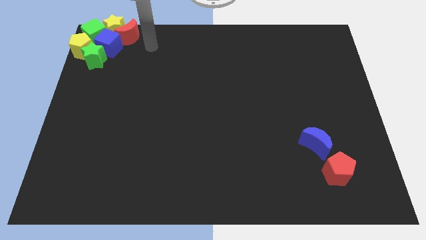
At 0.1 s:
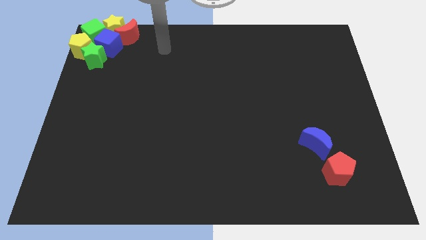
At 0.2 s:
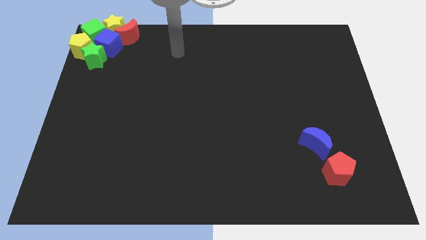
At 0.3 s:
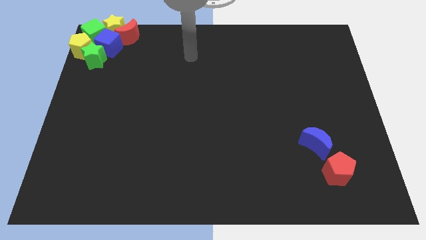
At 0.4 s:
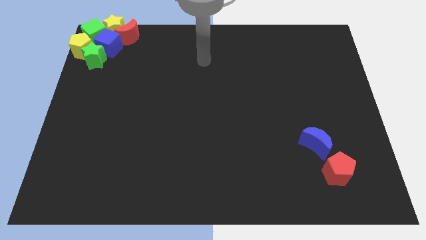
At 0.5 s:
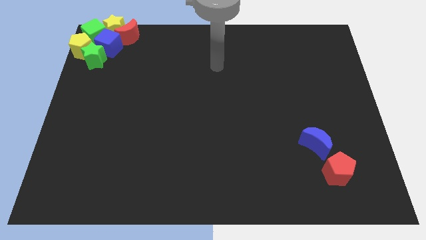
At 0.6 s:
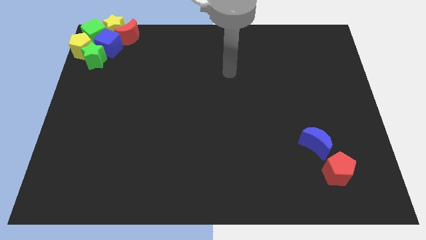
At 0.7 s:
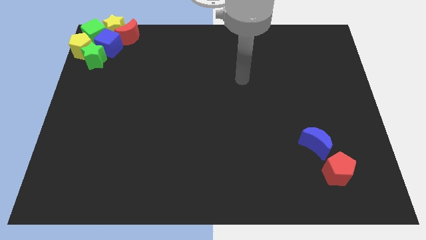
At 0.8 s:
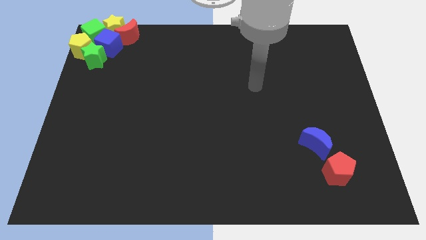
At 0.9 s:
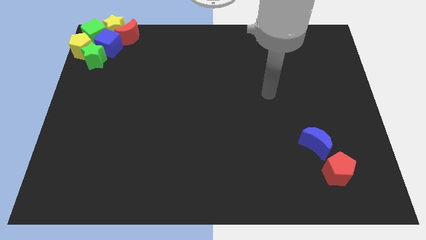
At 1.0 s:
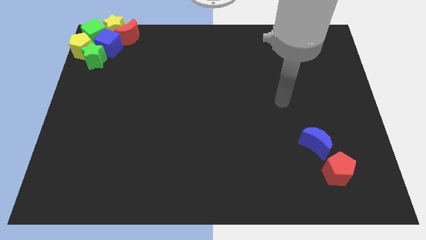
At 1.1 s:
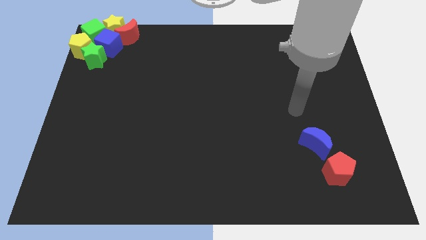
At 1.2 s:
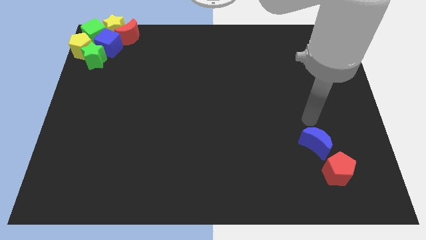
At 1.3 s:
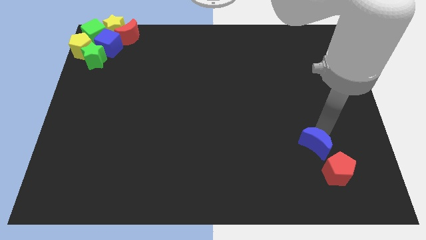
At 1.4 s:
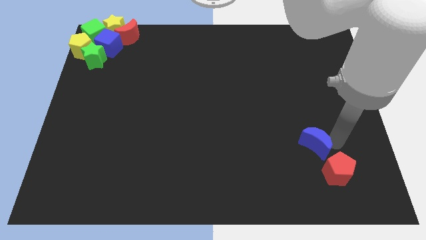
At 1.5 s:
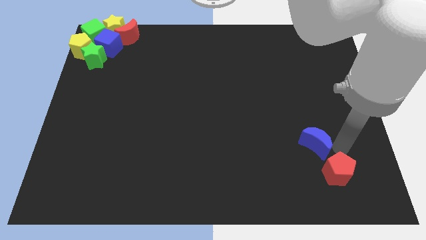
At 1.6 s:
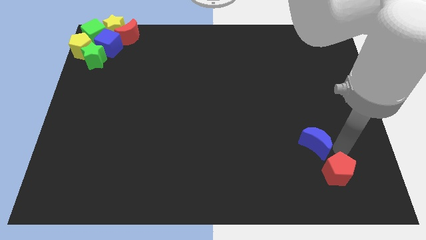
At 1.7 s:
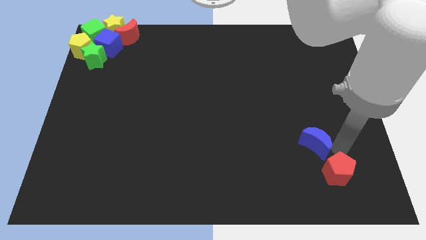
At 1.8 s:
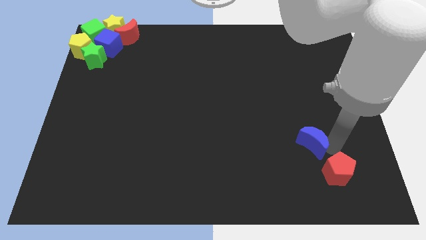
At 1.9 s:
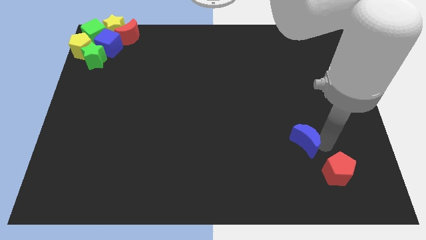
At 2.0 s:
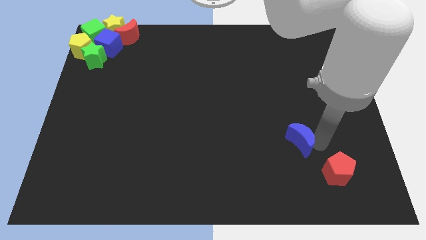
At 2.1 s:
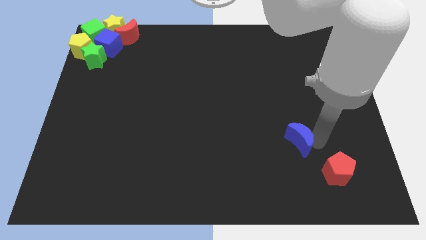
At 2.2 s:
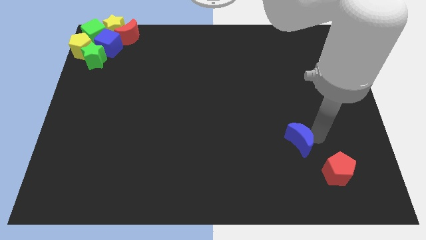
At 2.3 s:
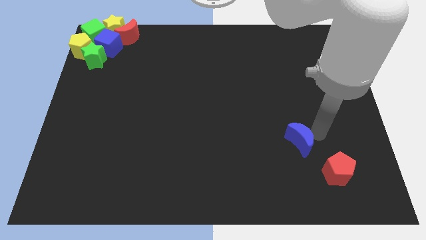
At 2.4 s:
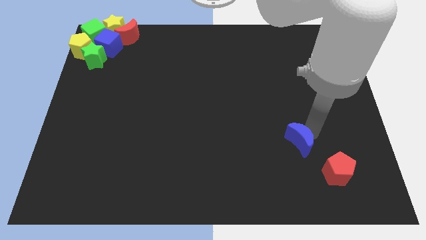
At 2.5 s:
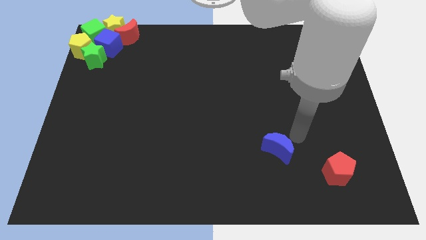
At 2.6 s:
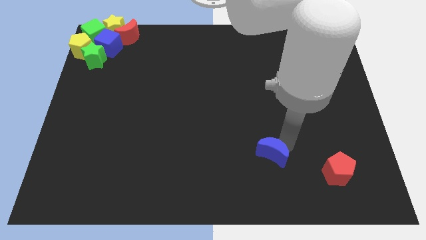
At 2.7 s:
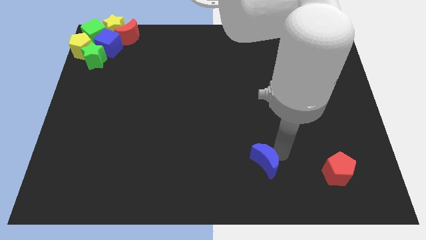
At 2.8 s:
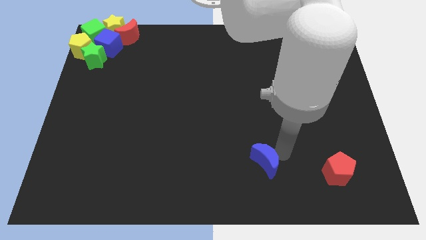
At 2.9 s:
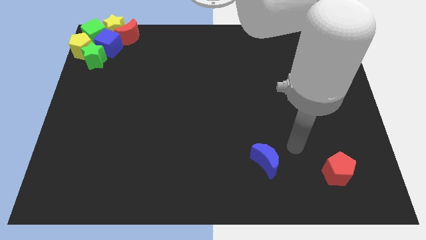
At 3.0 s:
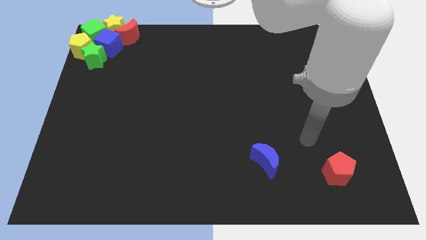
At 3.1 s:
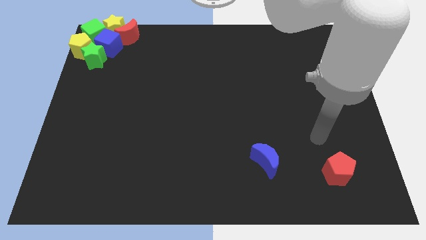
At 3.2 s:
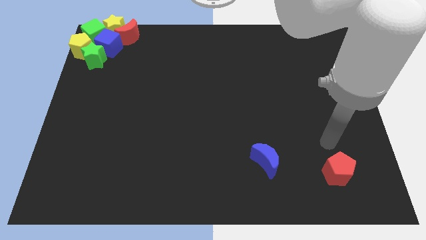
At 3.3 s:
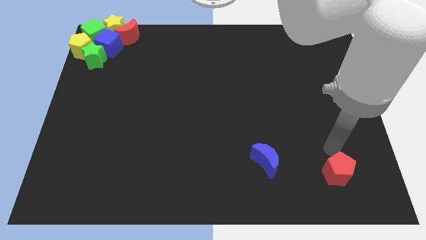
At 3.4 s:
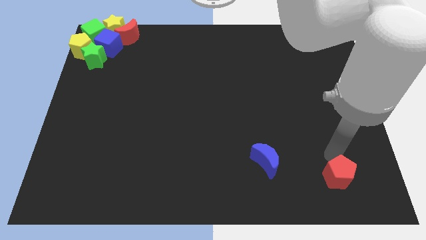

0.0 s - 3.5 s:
push the blue crescent away from the red pentagon

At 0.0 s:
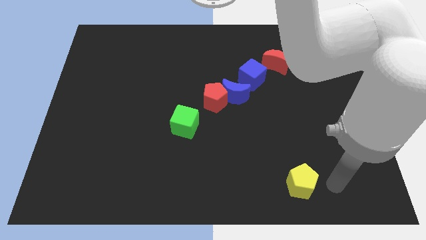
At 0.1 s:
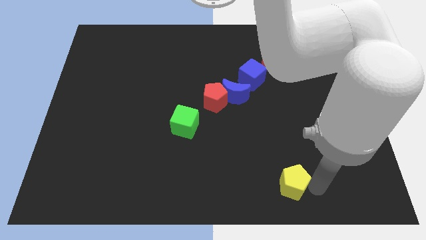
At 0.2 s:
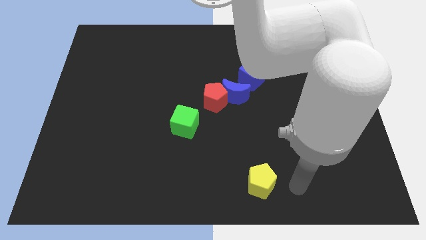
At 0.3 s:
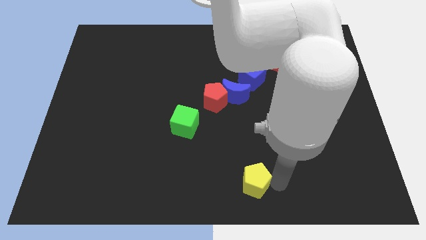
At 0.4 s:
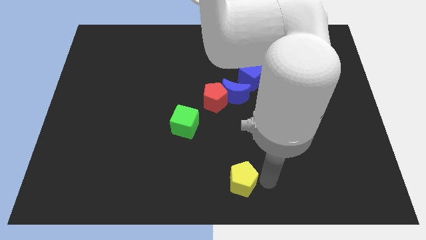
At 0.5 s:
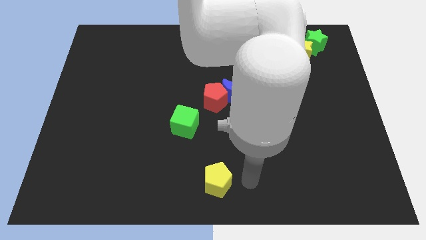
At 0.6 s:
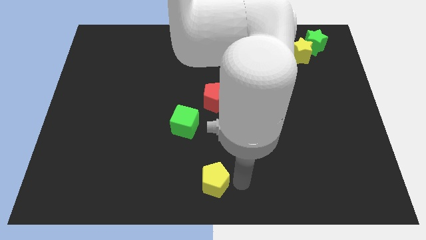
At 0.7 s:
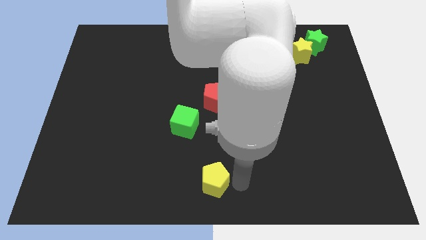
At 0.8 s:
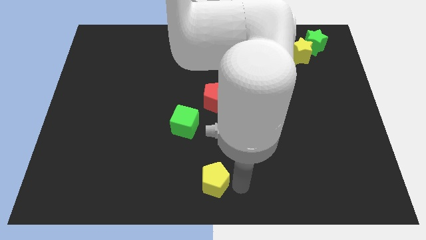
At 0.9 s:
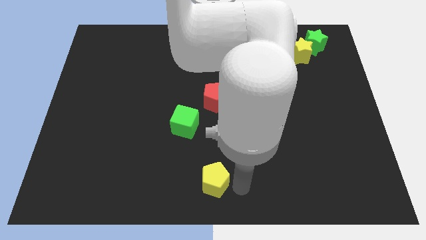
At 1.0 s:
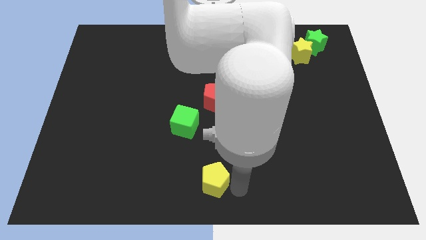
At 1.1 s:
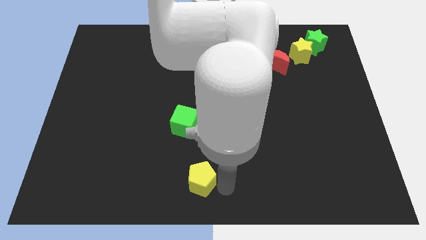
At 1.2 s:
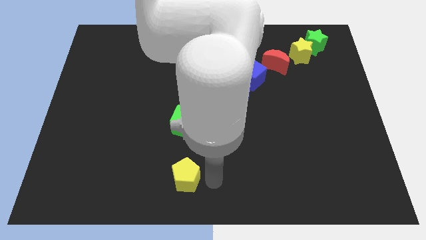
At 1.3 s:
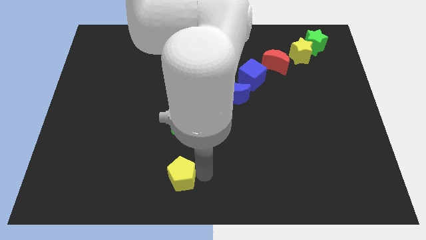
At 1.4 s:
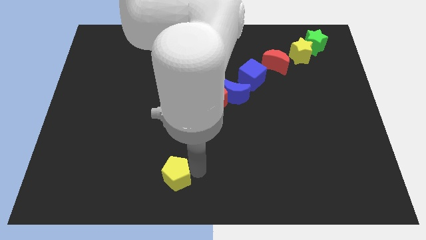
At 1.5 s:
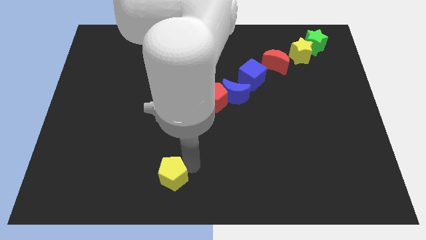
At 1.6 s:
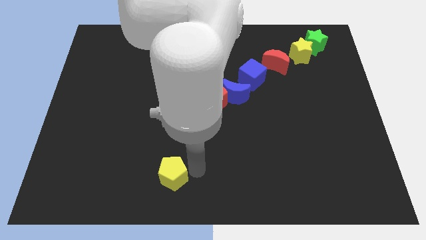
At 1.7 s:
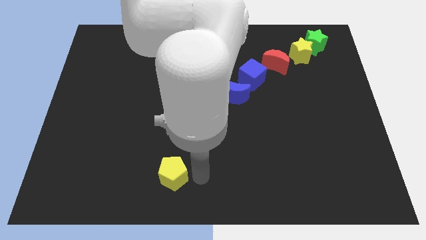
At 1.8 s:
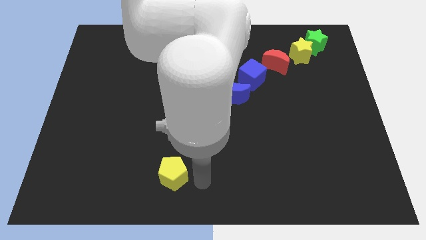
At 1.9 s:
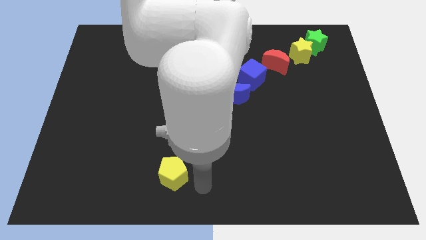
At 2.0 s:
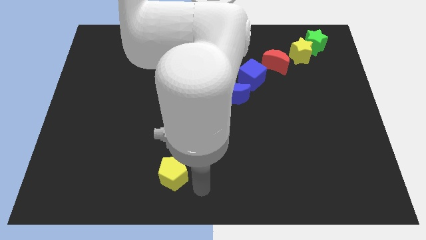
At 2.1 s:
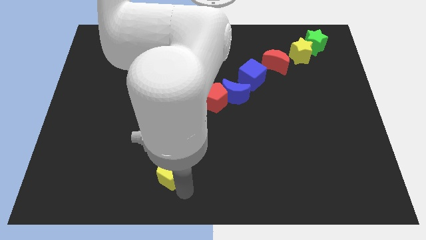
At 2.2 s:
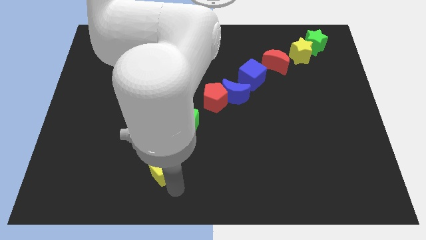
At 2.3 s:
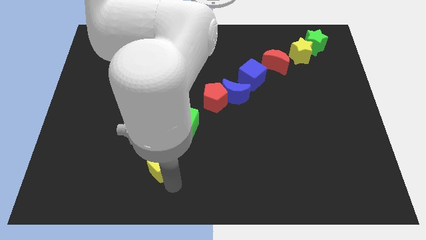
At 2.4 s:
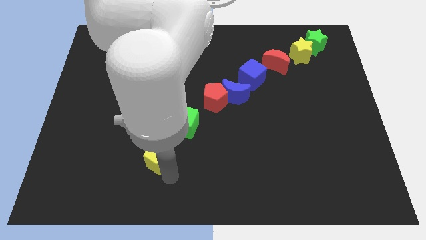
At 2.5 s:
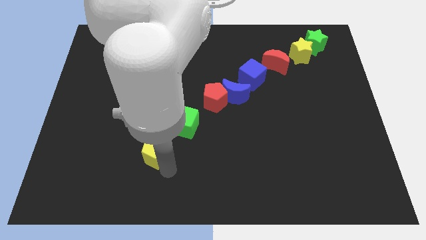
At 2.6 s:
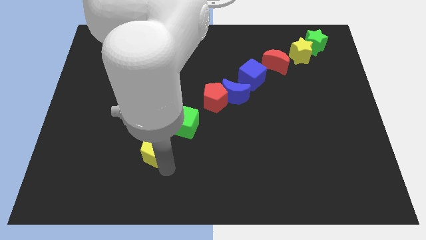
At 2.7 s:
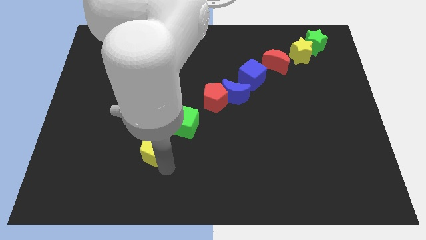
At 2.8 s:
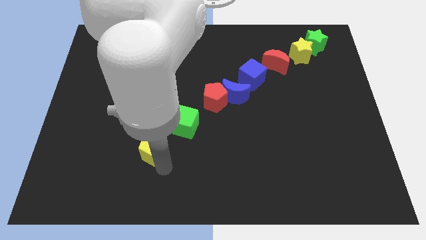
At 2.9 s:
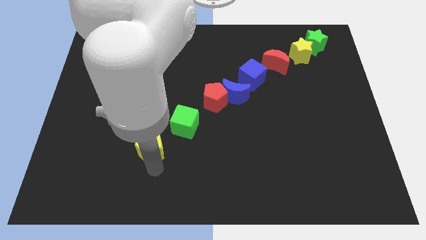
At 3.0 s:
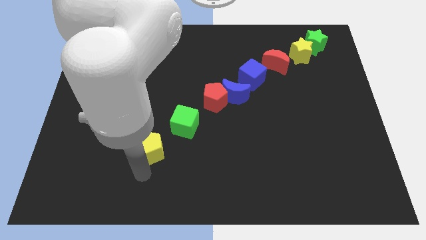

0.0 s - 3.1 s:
slide yellow pentagon diagonal to green cube

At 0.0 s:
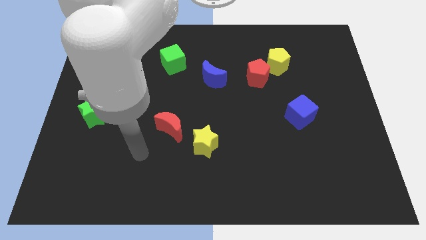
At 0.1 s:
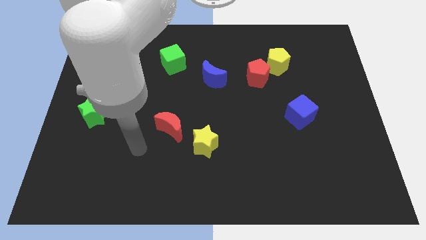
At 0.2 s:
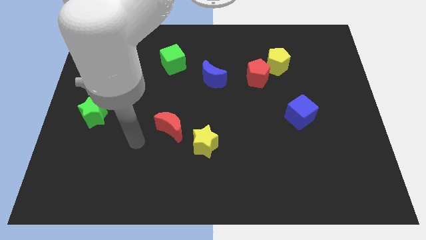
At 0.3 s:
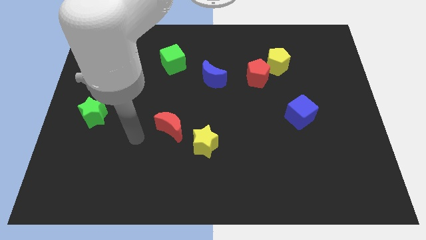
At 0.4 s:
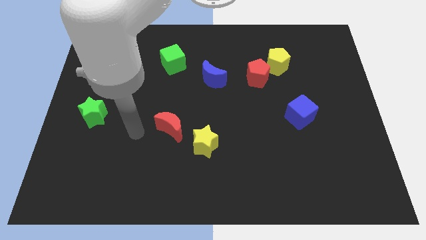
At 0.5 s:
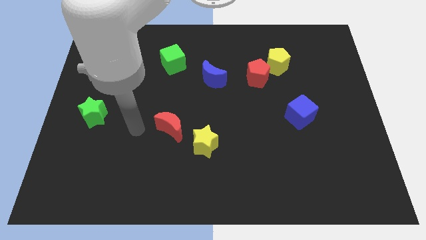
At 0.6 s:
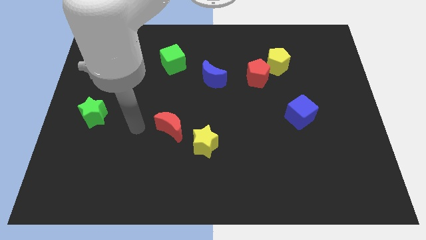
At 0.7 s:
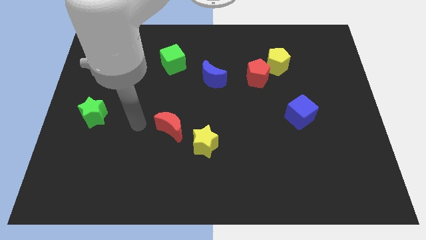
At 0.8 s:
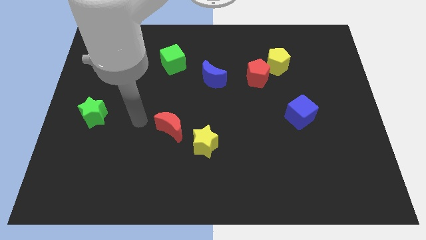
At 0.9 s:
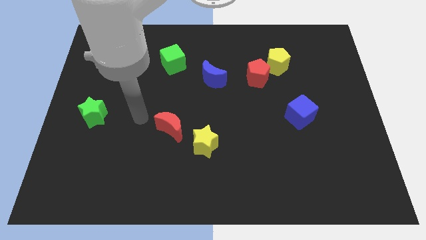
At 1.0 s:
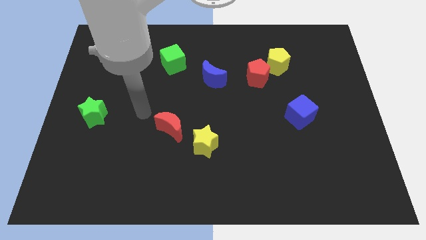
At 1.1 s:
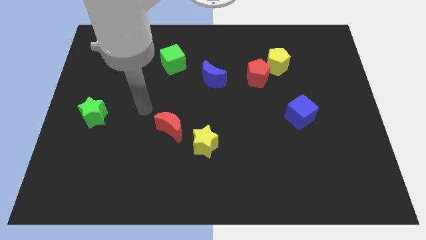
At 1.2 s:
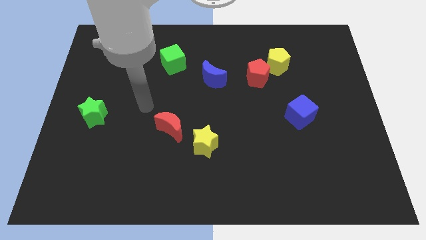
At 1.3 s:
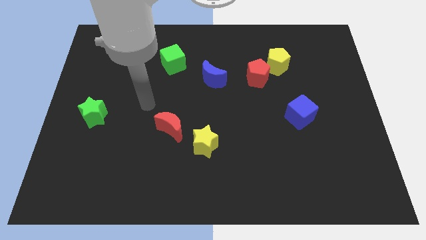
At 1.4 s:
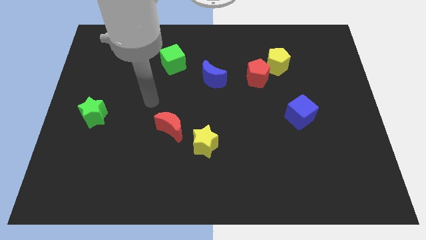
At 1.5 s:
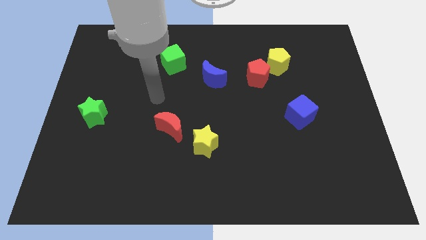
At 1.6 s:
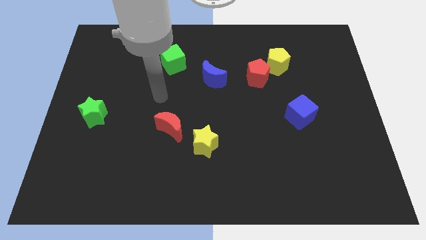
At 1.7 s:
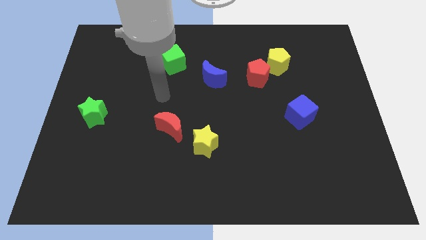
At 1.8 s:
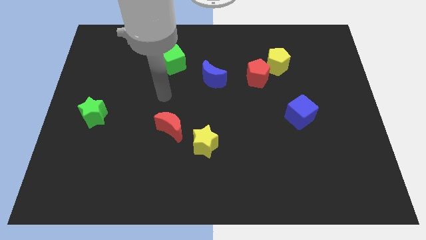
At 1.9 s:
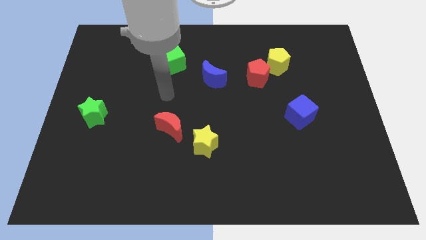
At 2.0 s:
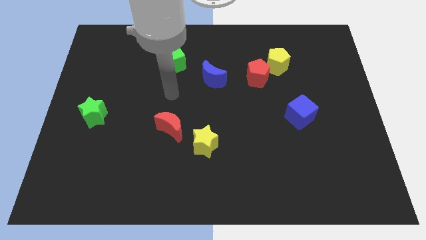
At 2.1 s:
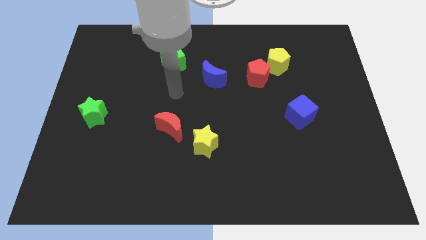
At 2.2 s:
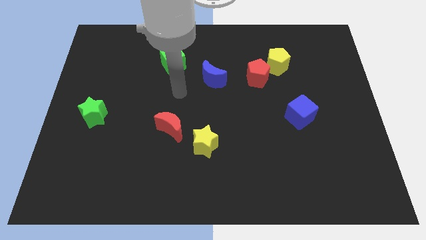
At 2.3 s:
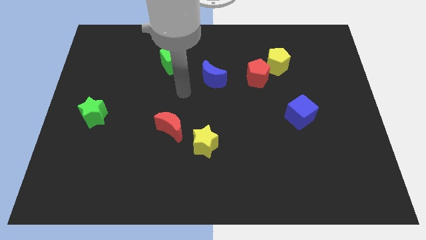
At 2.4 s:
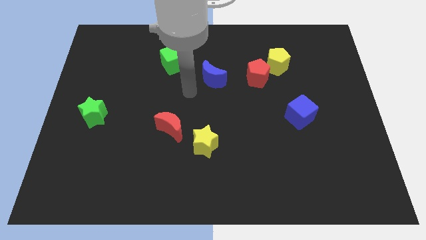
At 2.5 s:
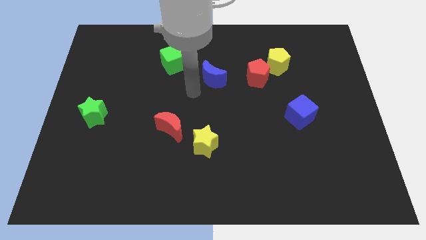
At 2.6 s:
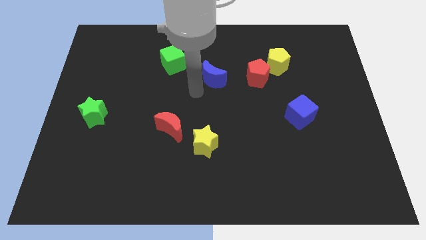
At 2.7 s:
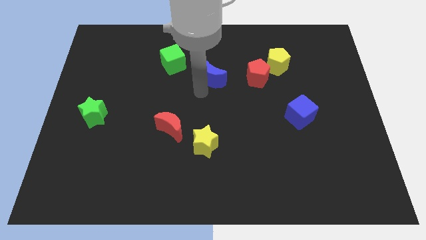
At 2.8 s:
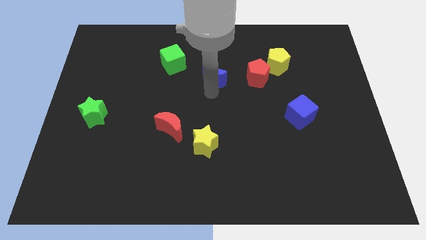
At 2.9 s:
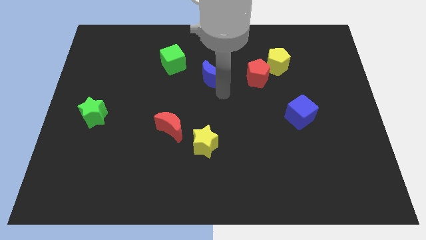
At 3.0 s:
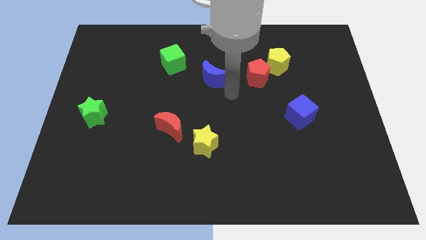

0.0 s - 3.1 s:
move your arm towards the blue crescent
